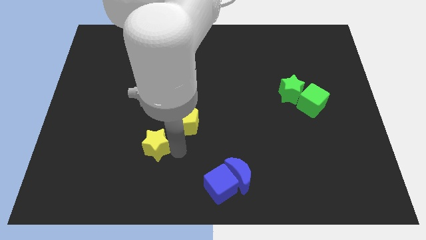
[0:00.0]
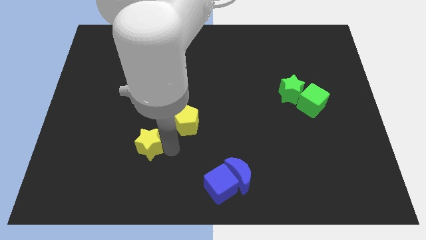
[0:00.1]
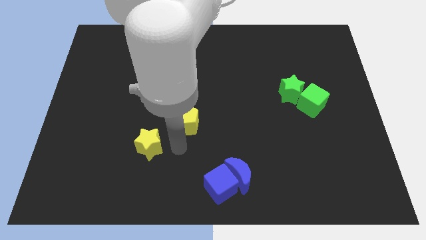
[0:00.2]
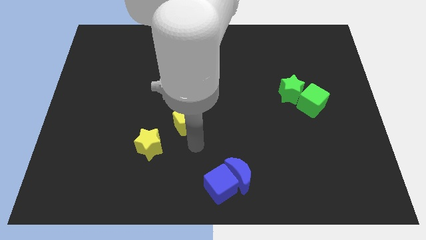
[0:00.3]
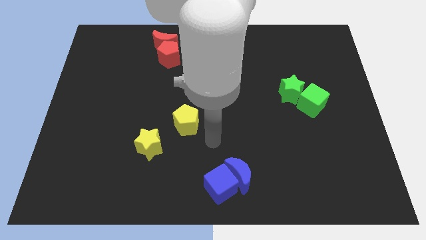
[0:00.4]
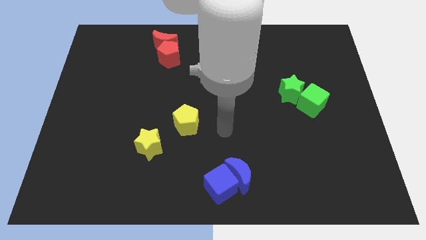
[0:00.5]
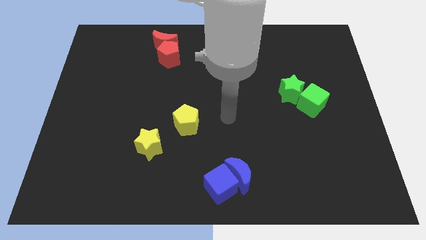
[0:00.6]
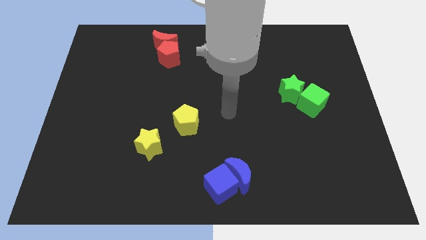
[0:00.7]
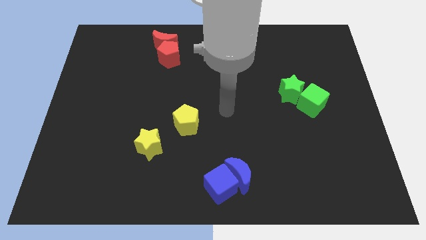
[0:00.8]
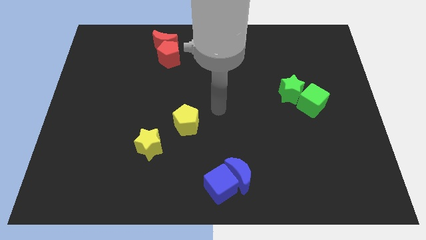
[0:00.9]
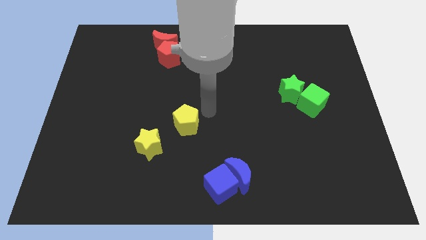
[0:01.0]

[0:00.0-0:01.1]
slightly move the yellow star to the left of the board

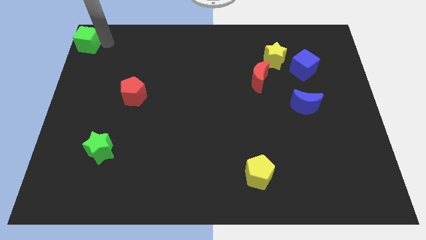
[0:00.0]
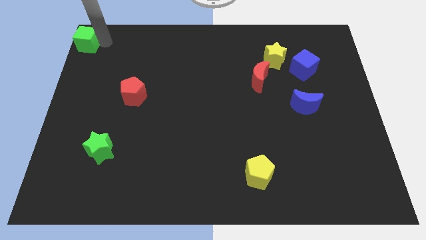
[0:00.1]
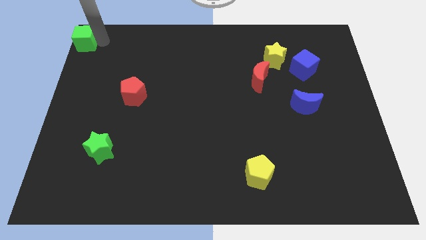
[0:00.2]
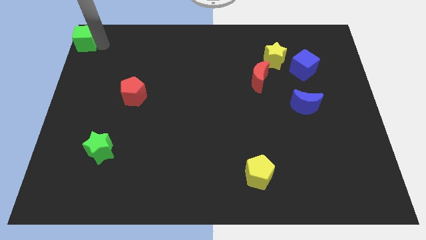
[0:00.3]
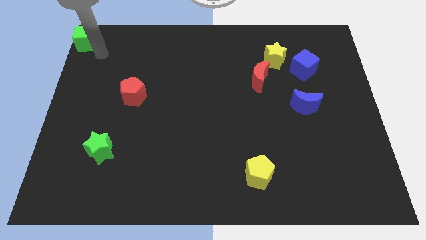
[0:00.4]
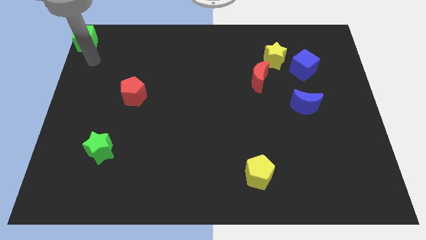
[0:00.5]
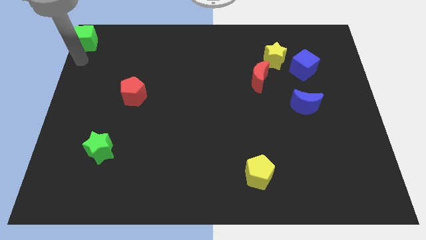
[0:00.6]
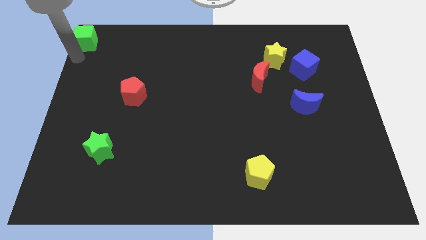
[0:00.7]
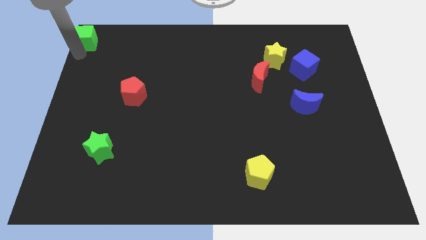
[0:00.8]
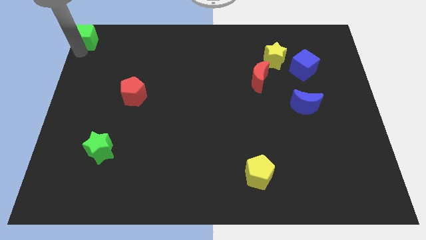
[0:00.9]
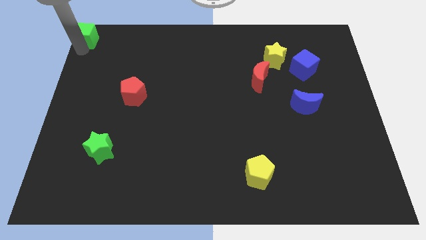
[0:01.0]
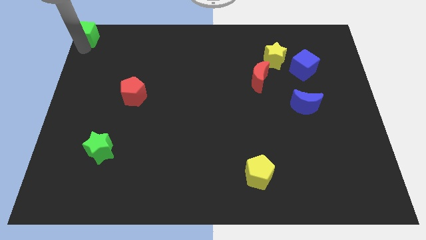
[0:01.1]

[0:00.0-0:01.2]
push the green cube slightly up

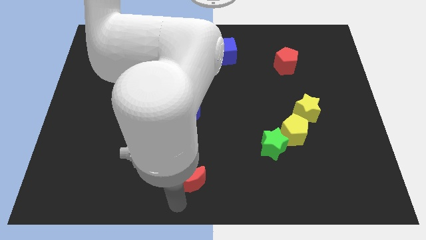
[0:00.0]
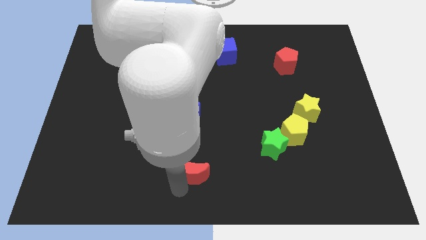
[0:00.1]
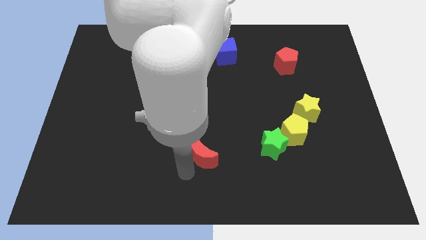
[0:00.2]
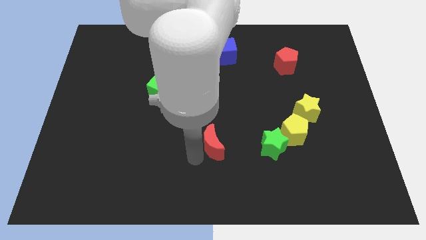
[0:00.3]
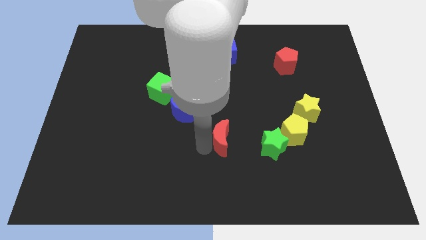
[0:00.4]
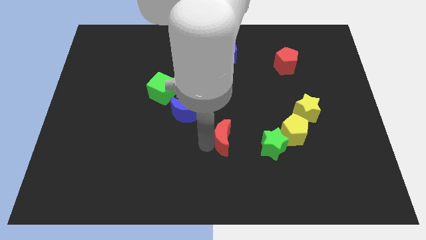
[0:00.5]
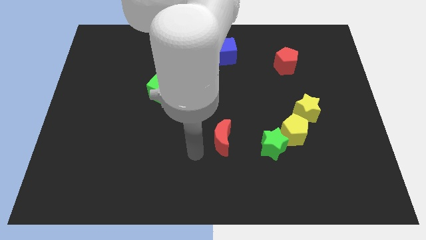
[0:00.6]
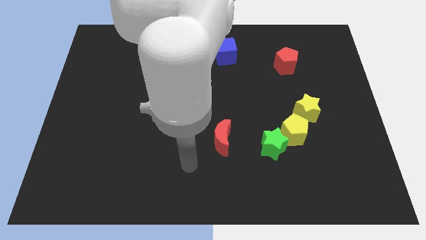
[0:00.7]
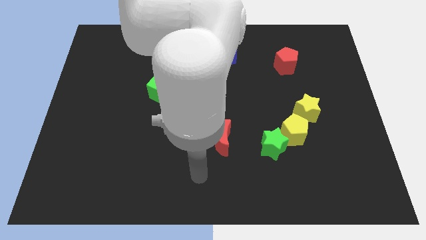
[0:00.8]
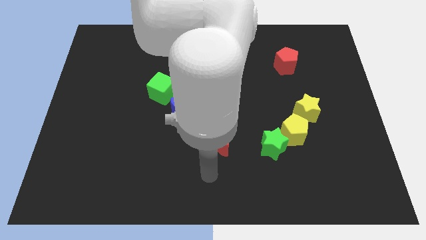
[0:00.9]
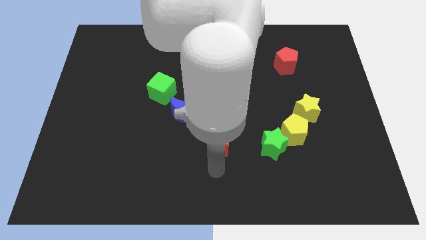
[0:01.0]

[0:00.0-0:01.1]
place red moon to the left of green star

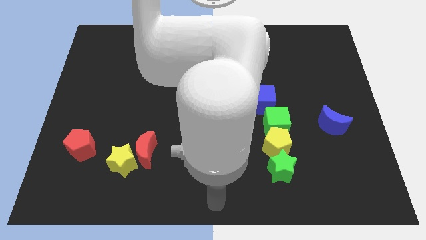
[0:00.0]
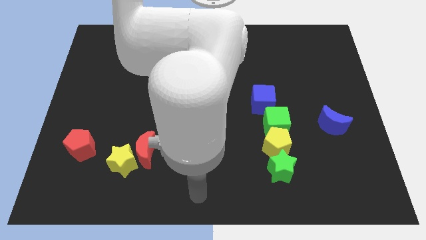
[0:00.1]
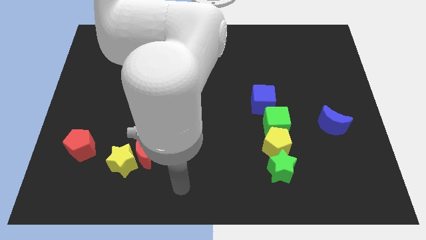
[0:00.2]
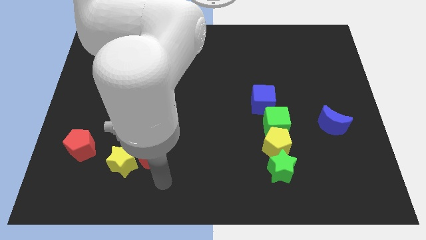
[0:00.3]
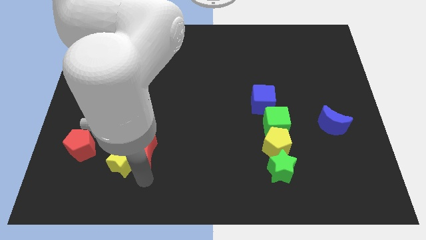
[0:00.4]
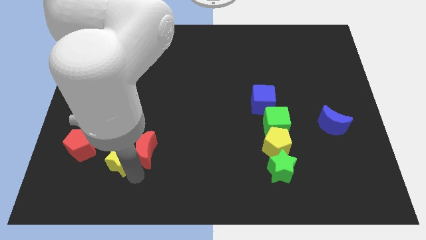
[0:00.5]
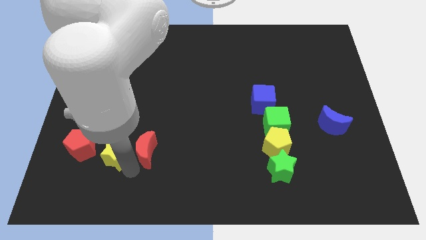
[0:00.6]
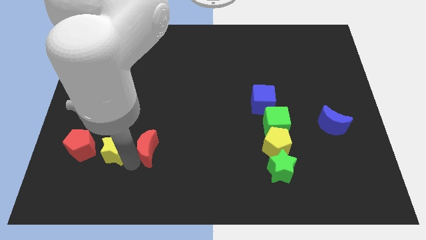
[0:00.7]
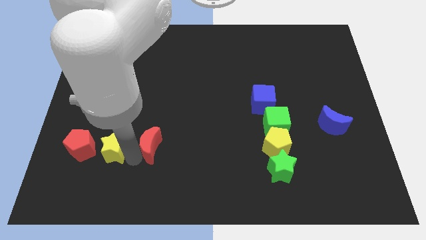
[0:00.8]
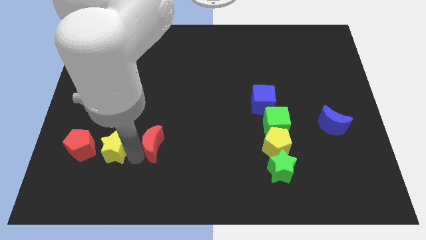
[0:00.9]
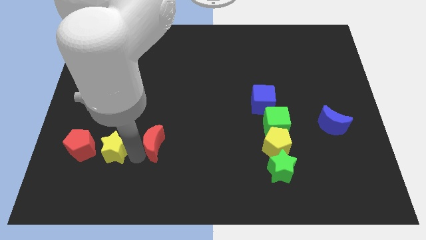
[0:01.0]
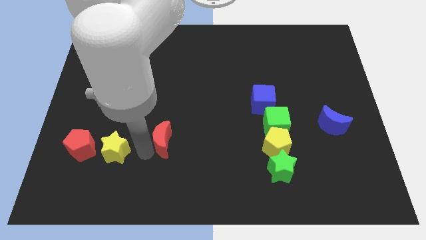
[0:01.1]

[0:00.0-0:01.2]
place yellow star to the right of red pentagon

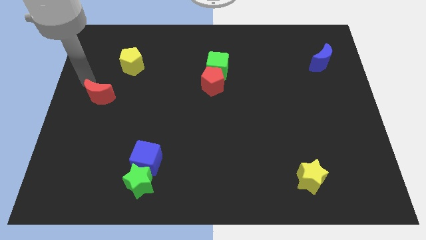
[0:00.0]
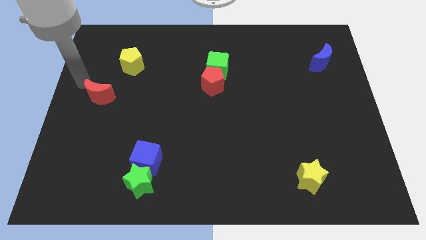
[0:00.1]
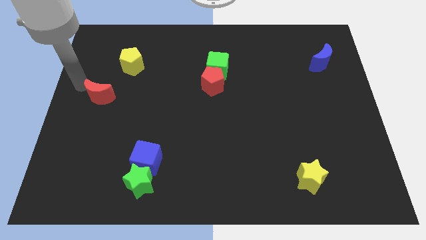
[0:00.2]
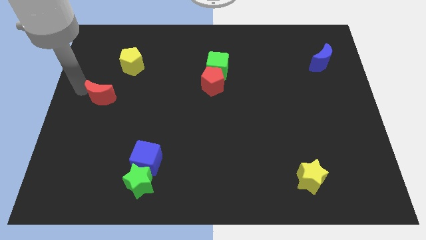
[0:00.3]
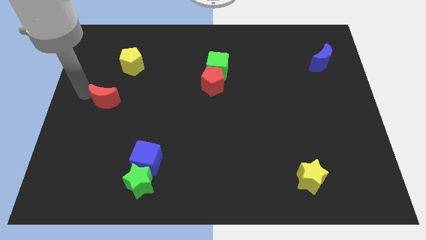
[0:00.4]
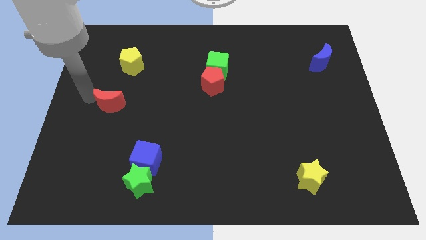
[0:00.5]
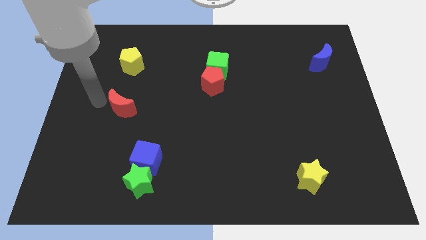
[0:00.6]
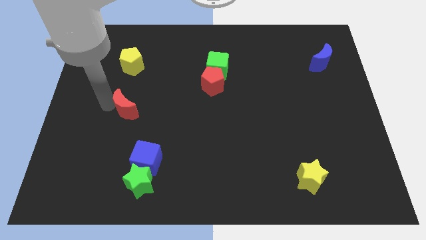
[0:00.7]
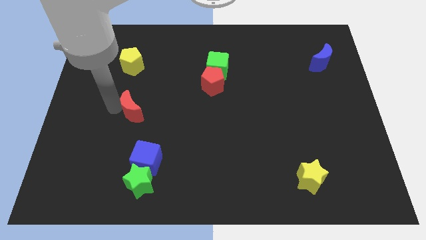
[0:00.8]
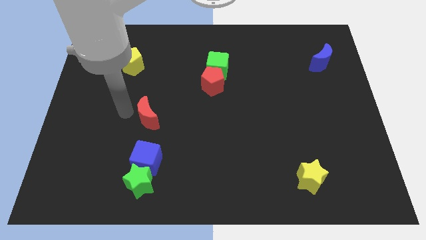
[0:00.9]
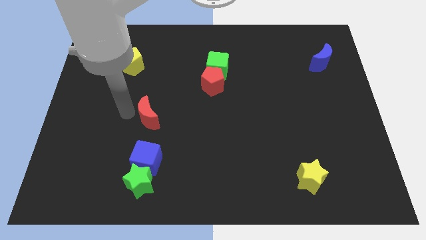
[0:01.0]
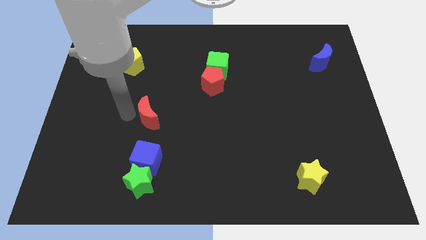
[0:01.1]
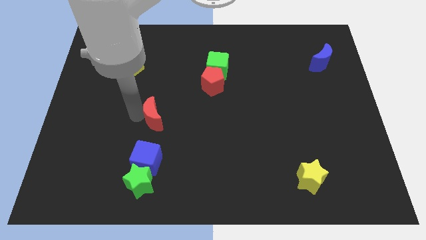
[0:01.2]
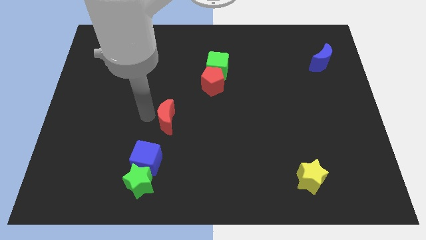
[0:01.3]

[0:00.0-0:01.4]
place the red crescent vertically above the blue cube

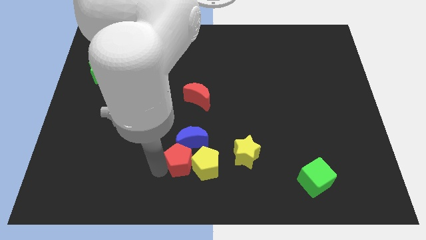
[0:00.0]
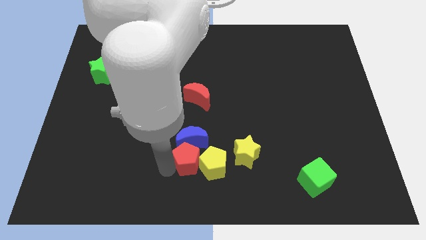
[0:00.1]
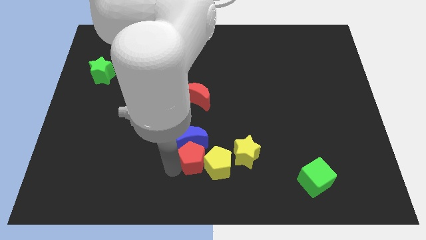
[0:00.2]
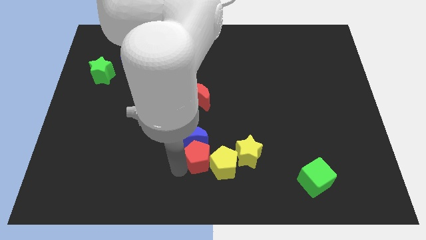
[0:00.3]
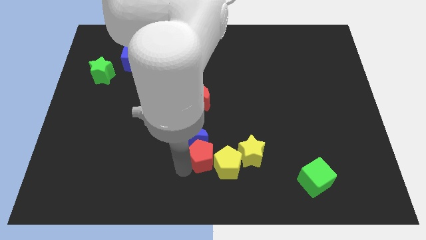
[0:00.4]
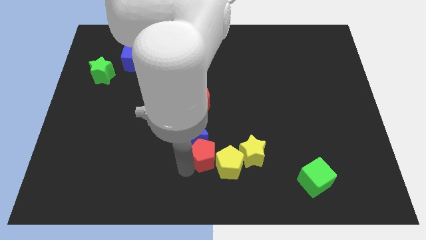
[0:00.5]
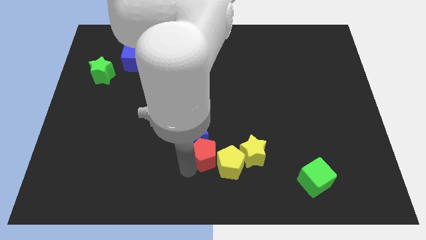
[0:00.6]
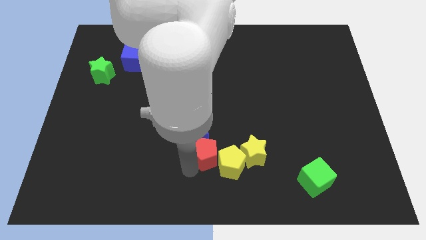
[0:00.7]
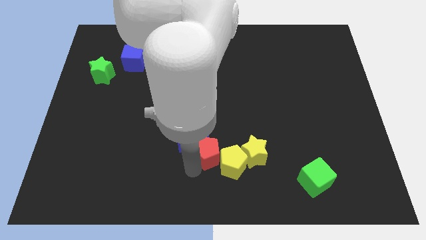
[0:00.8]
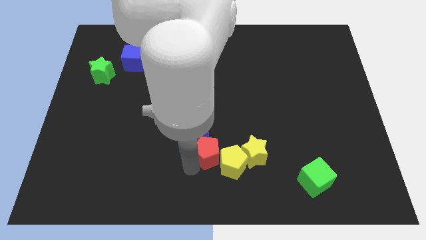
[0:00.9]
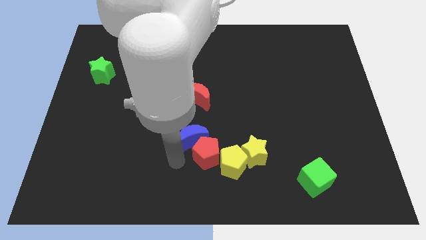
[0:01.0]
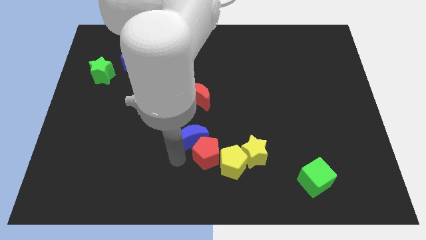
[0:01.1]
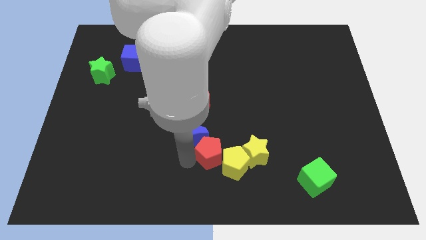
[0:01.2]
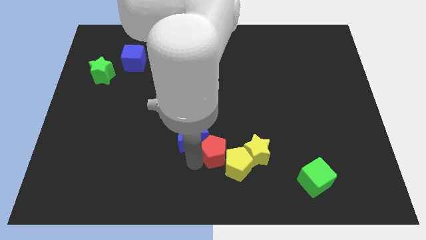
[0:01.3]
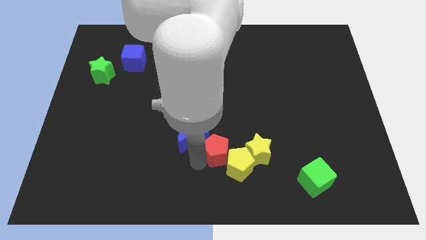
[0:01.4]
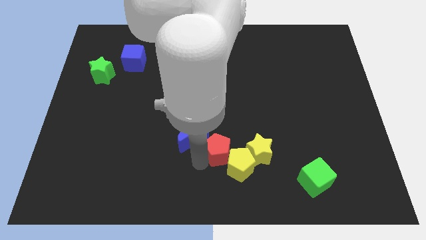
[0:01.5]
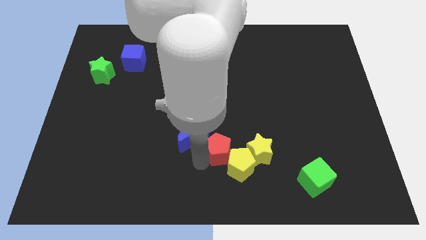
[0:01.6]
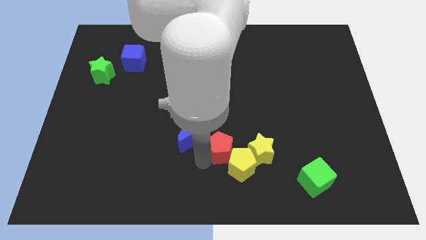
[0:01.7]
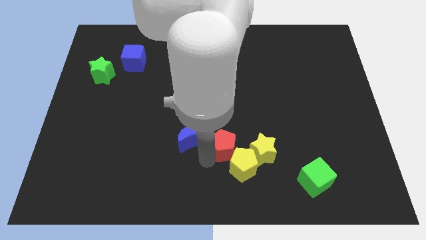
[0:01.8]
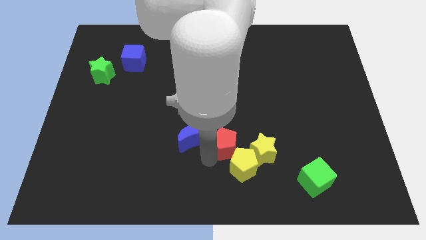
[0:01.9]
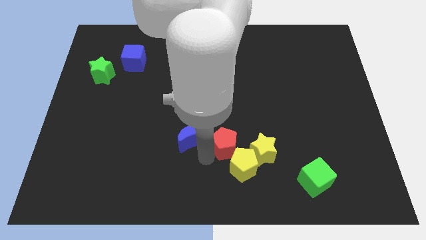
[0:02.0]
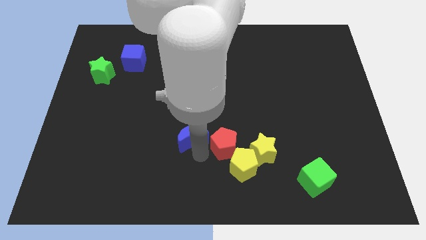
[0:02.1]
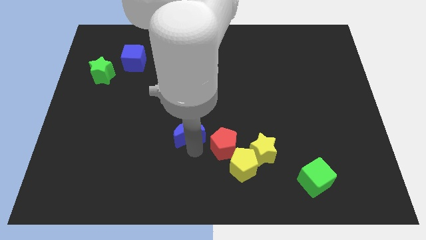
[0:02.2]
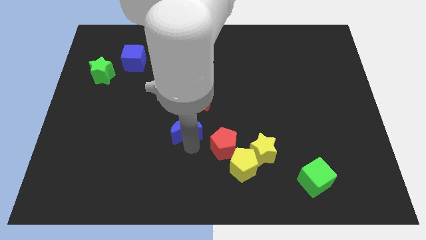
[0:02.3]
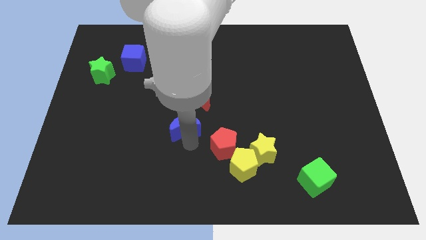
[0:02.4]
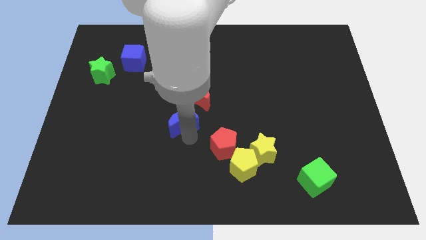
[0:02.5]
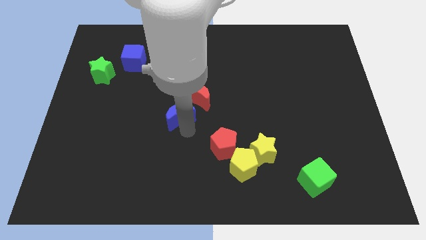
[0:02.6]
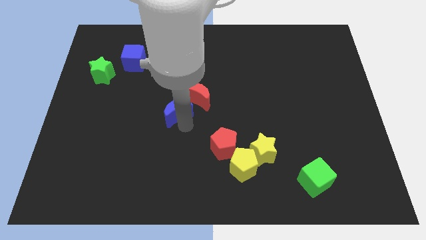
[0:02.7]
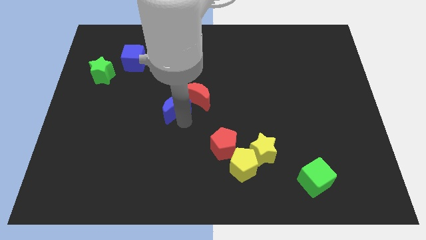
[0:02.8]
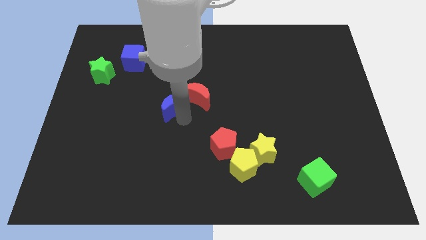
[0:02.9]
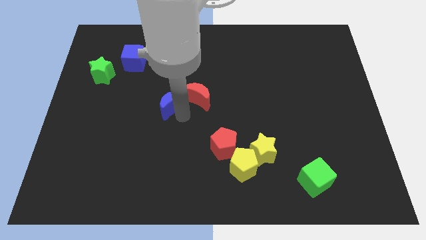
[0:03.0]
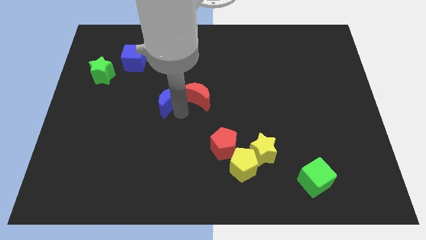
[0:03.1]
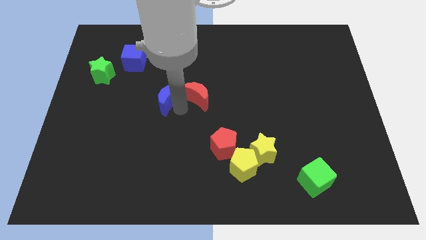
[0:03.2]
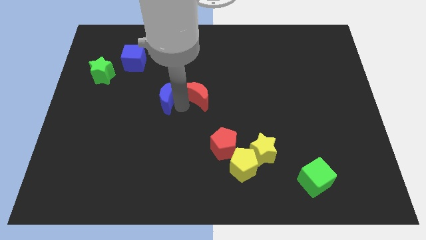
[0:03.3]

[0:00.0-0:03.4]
push the blue moon to the right side of the red moon
